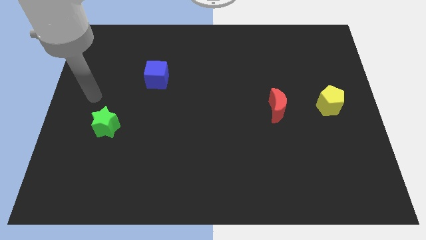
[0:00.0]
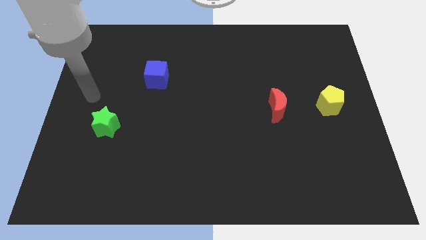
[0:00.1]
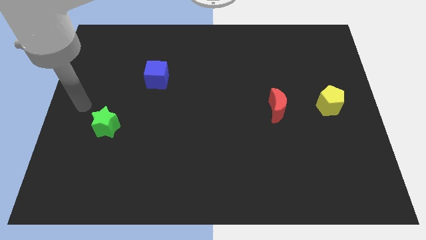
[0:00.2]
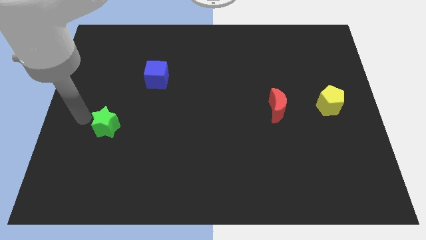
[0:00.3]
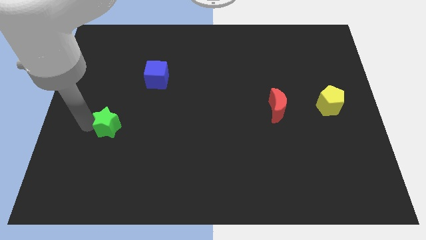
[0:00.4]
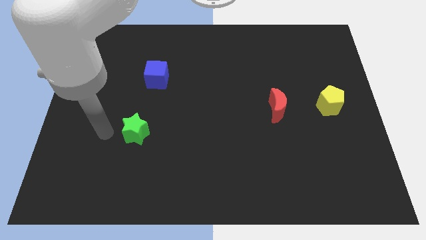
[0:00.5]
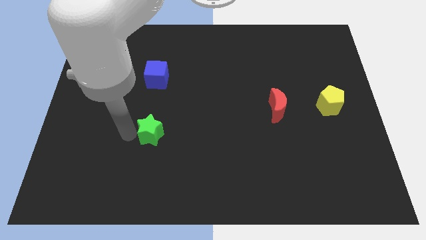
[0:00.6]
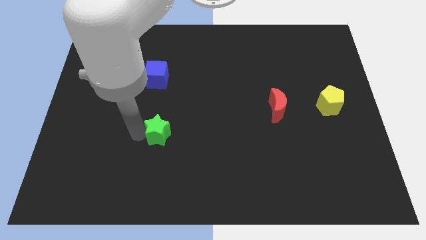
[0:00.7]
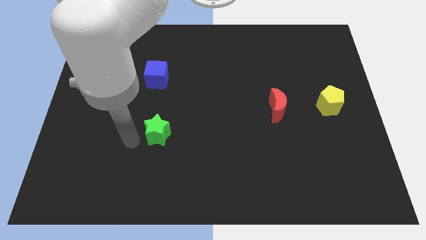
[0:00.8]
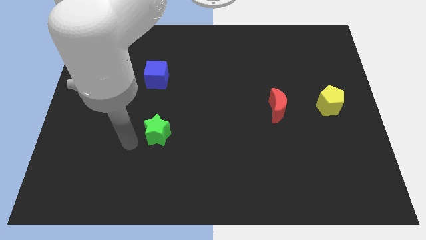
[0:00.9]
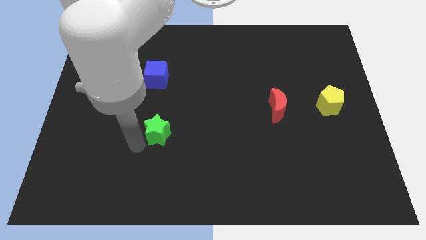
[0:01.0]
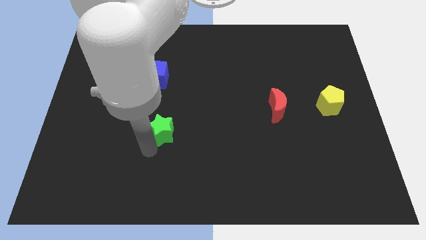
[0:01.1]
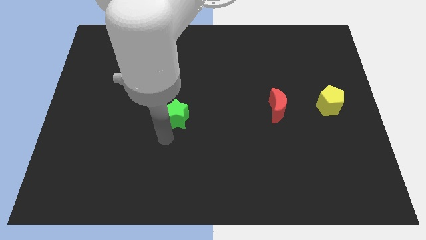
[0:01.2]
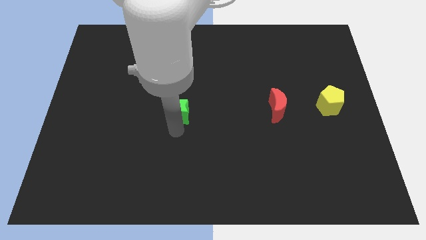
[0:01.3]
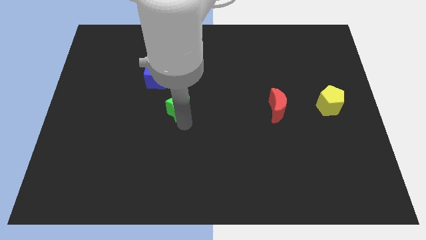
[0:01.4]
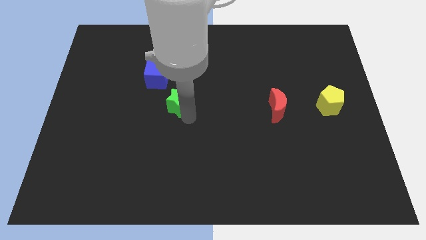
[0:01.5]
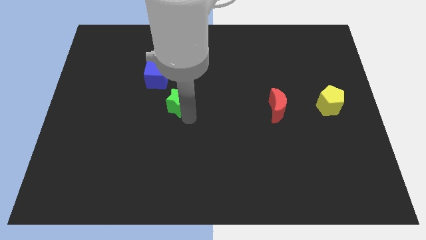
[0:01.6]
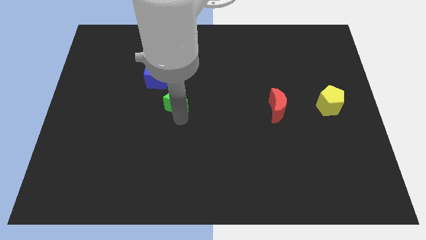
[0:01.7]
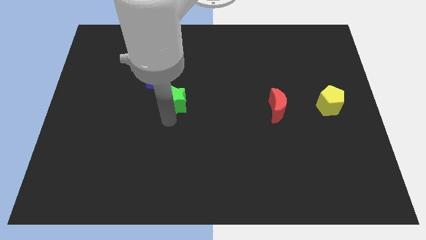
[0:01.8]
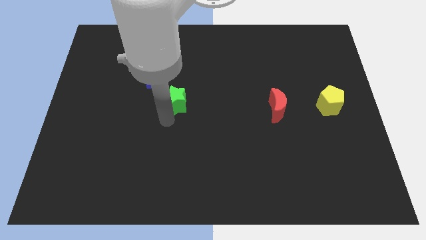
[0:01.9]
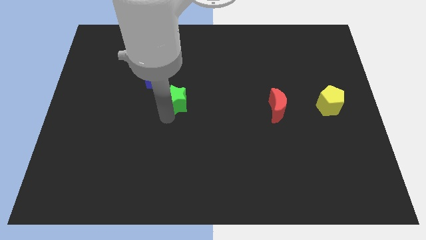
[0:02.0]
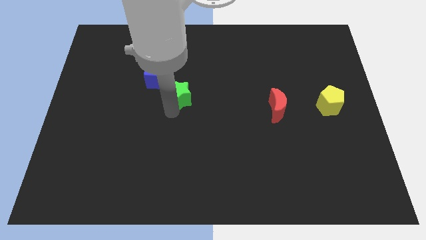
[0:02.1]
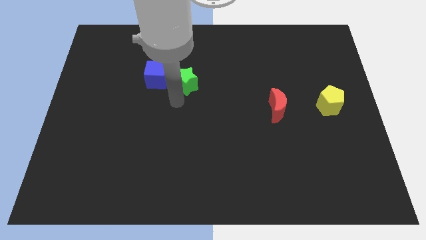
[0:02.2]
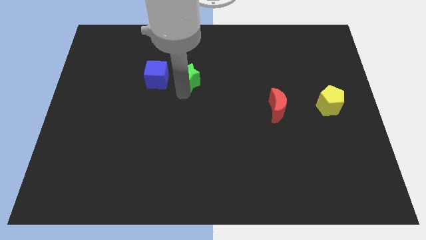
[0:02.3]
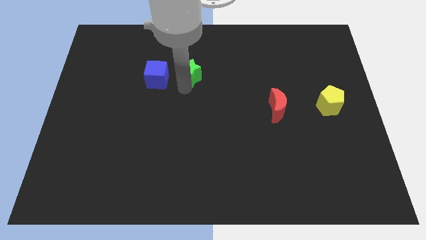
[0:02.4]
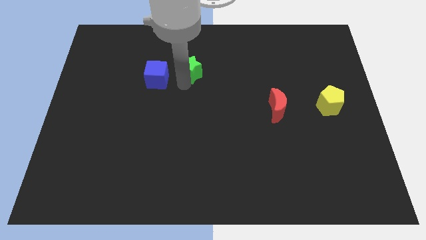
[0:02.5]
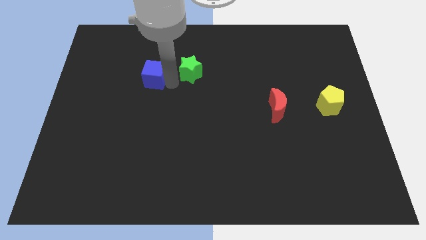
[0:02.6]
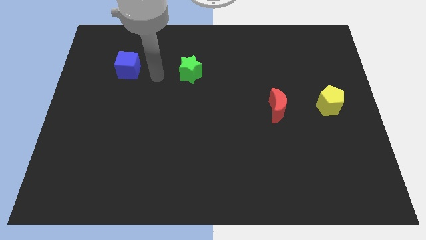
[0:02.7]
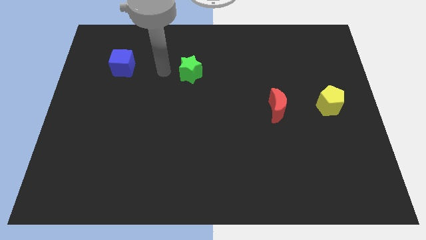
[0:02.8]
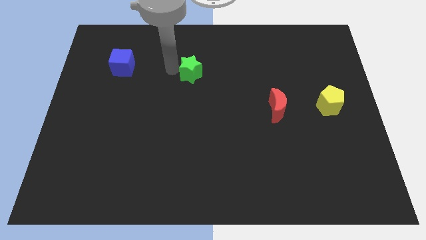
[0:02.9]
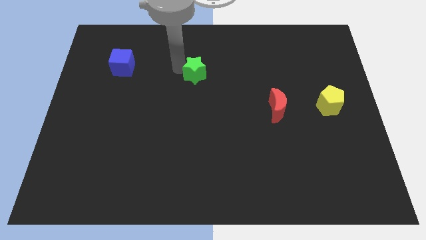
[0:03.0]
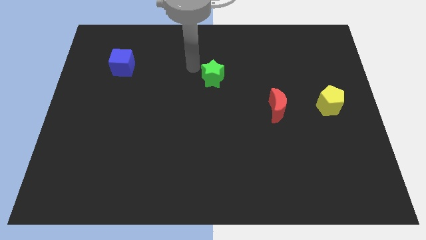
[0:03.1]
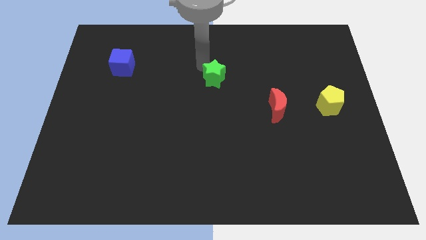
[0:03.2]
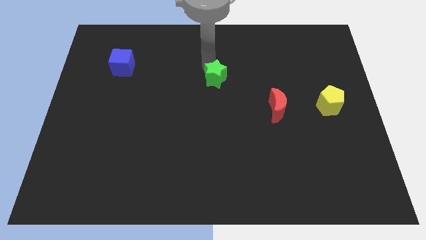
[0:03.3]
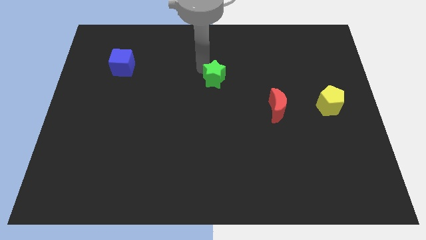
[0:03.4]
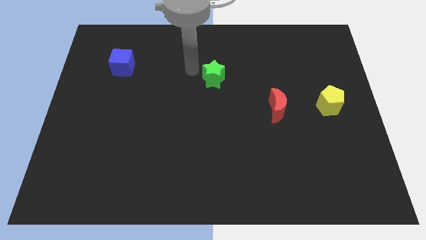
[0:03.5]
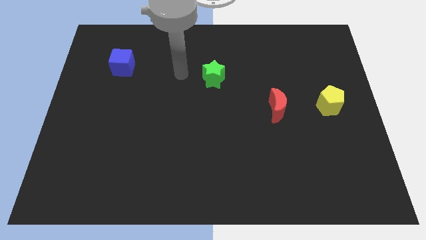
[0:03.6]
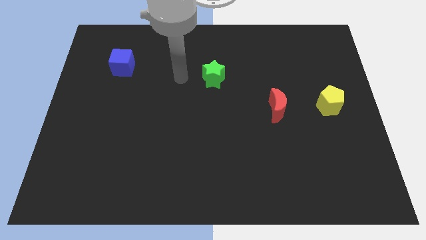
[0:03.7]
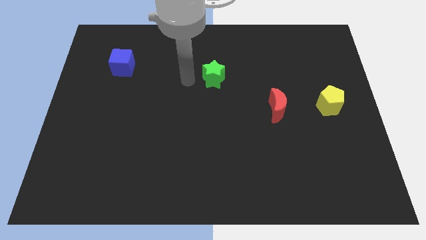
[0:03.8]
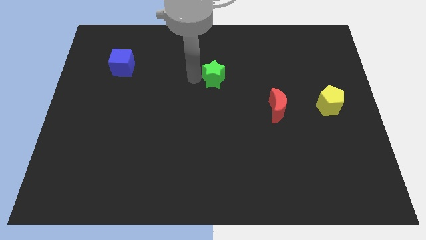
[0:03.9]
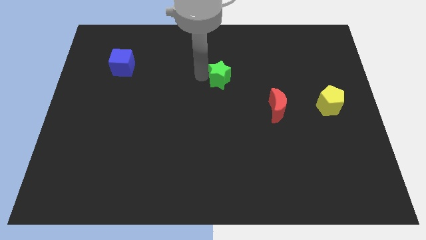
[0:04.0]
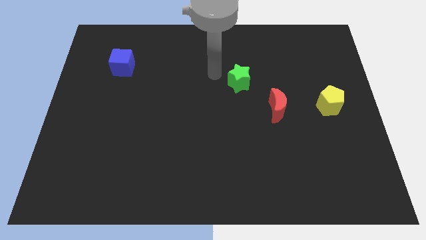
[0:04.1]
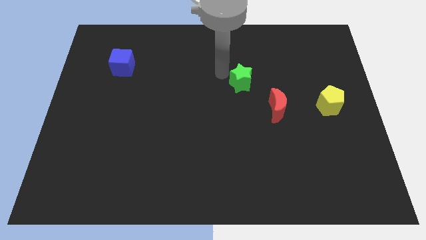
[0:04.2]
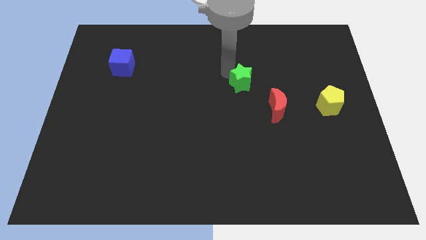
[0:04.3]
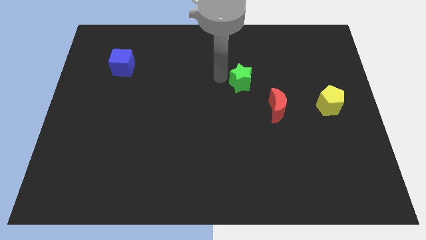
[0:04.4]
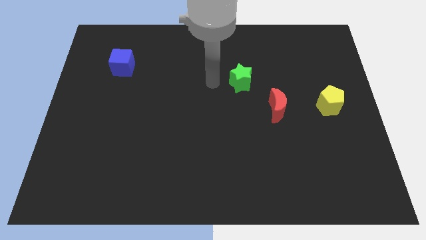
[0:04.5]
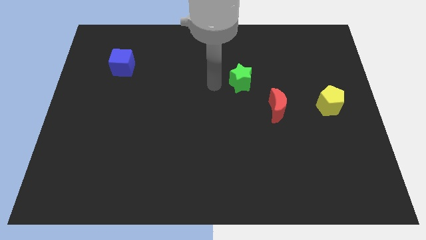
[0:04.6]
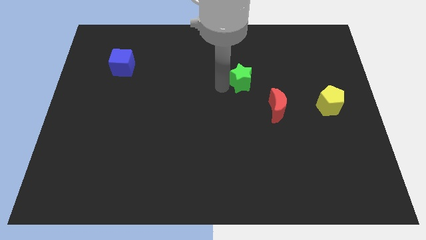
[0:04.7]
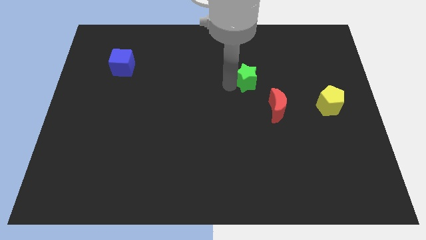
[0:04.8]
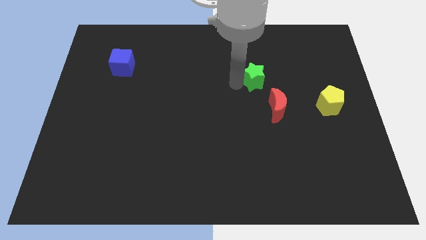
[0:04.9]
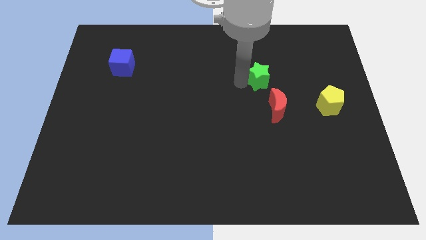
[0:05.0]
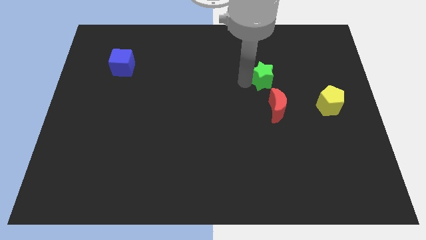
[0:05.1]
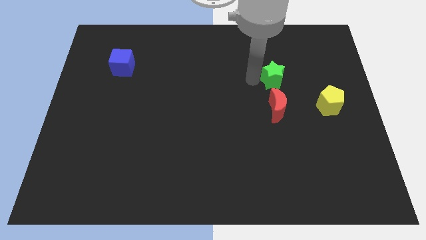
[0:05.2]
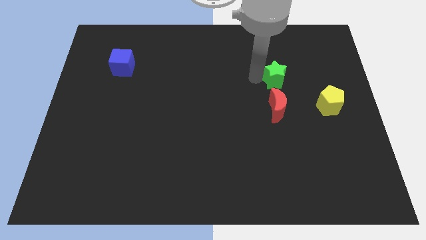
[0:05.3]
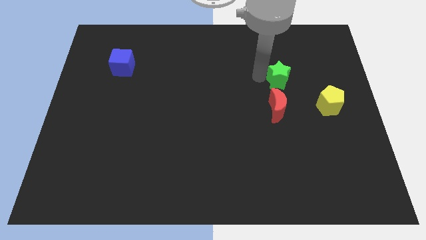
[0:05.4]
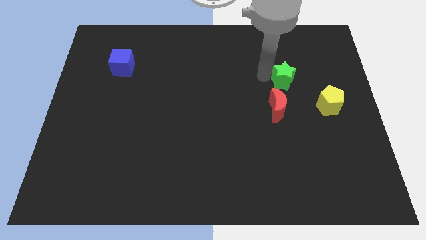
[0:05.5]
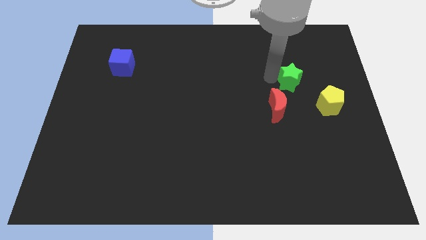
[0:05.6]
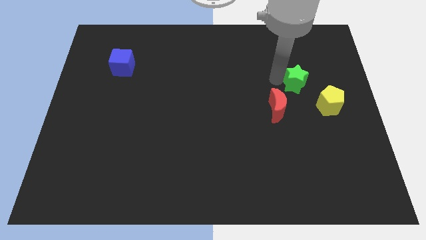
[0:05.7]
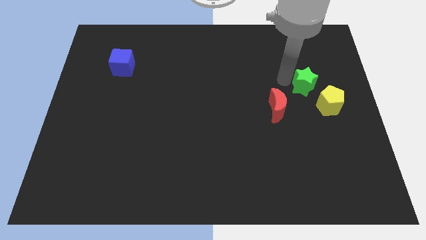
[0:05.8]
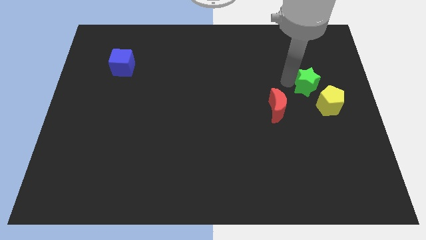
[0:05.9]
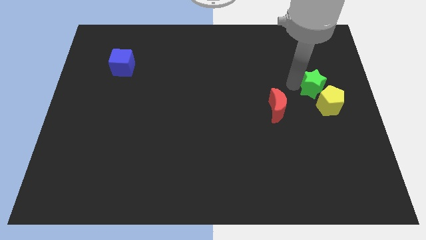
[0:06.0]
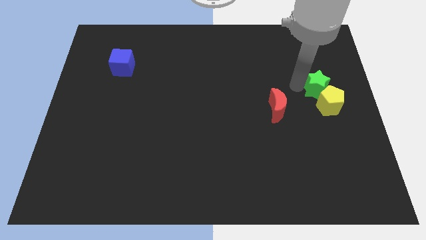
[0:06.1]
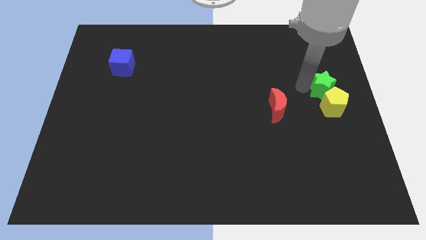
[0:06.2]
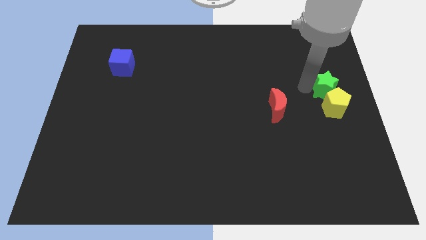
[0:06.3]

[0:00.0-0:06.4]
put the green star close to the yellow pentagon

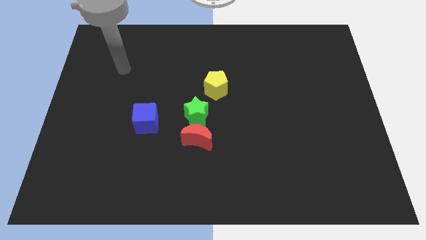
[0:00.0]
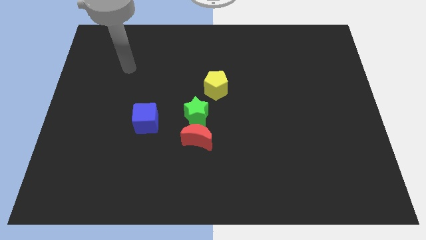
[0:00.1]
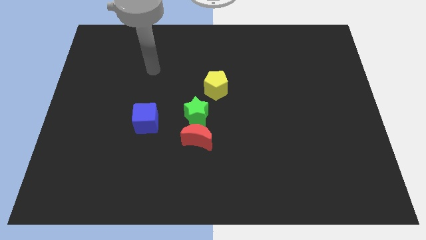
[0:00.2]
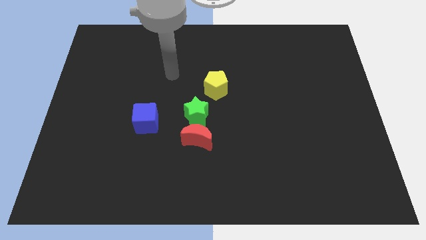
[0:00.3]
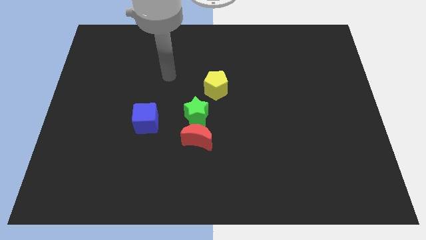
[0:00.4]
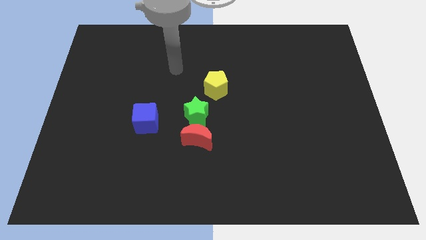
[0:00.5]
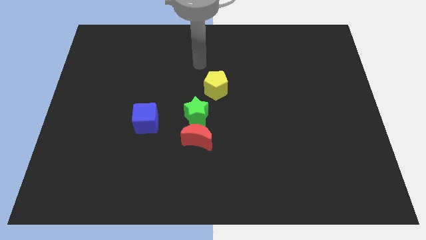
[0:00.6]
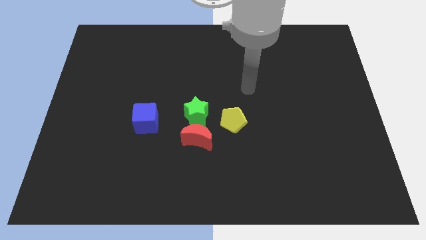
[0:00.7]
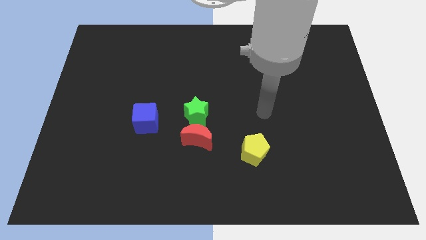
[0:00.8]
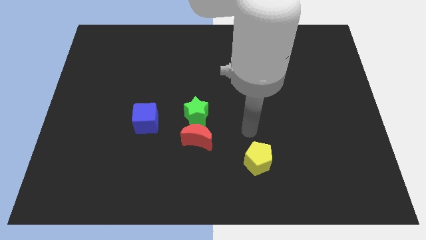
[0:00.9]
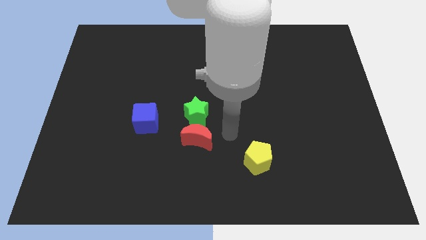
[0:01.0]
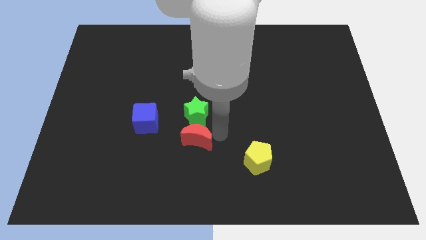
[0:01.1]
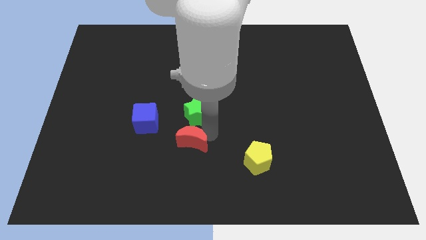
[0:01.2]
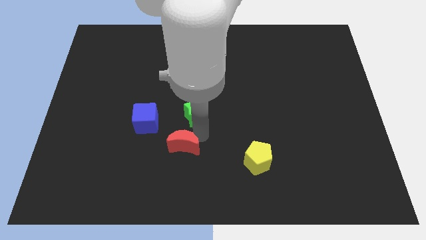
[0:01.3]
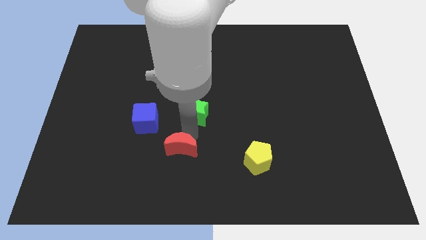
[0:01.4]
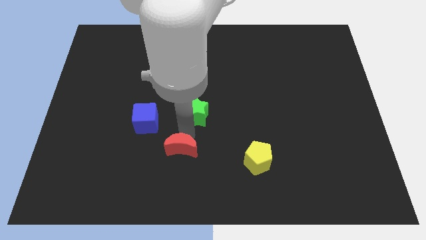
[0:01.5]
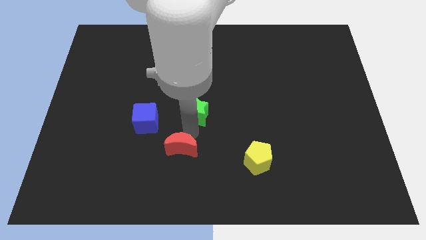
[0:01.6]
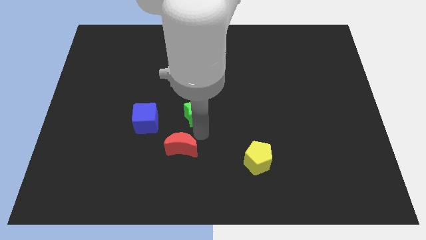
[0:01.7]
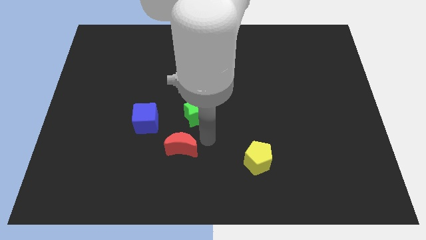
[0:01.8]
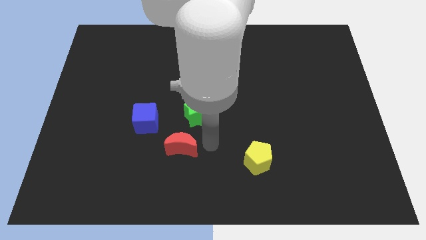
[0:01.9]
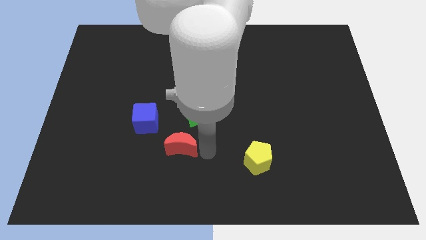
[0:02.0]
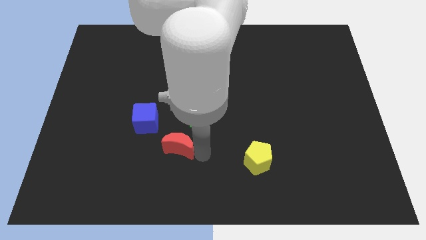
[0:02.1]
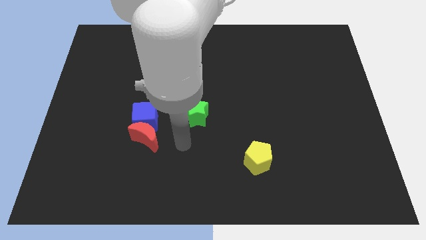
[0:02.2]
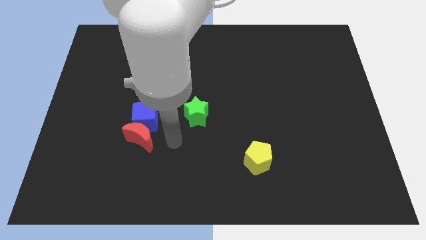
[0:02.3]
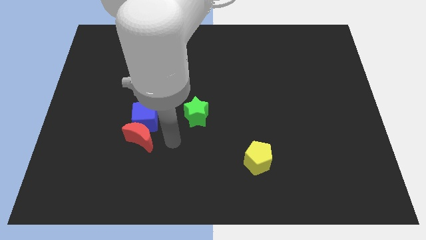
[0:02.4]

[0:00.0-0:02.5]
put the moon next to the blue block
